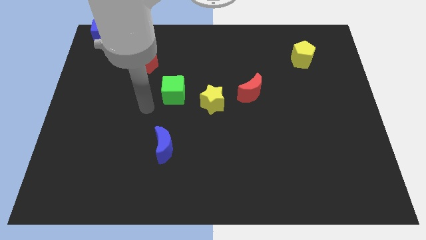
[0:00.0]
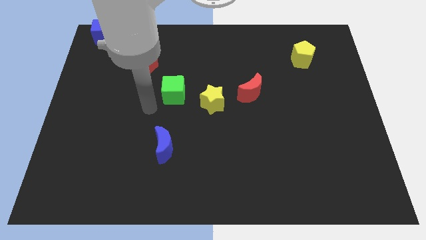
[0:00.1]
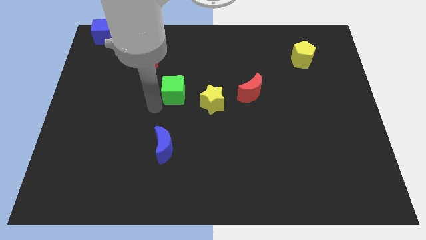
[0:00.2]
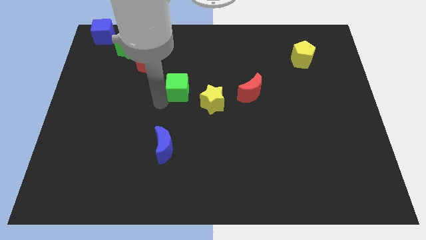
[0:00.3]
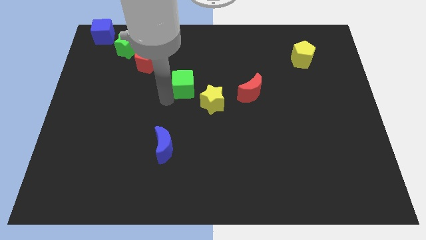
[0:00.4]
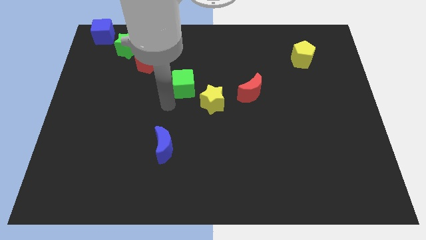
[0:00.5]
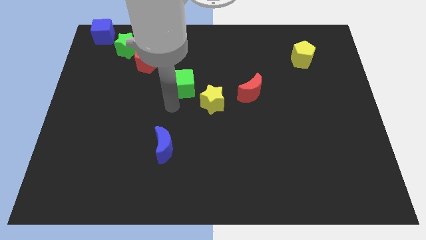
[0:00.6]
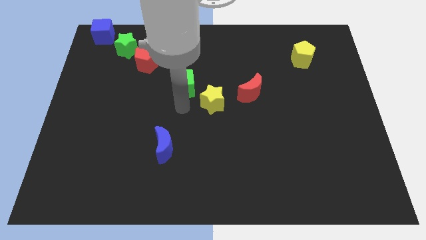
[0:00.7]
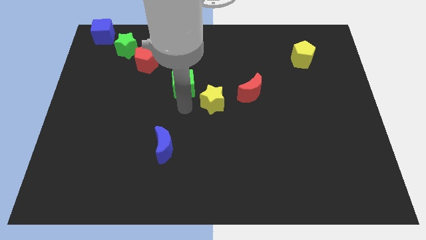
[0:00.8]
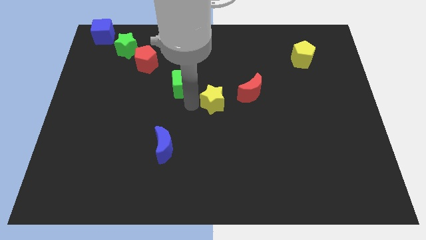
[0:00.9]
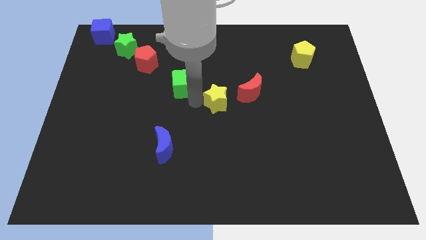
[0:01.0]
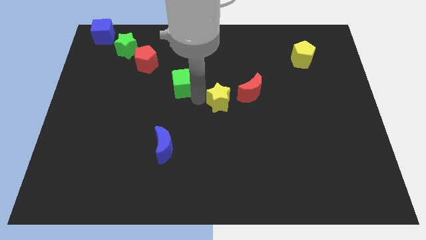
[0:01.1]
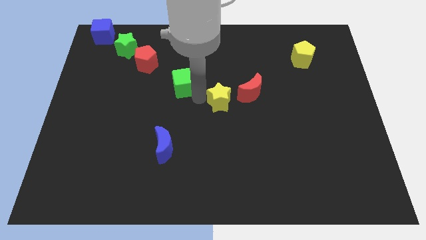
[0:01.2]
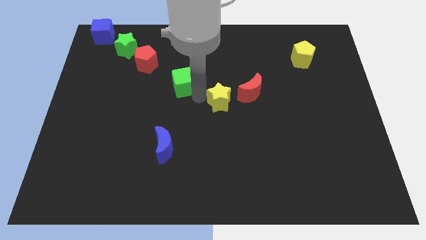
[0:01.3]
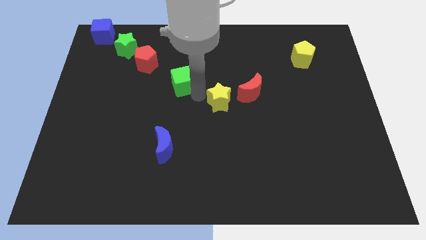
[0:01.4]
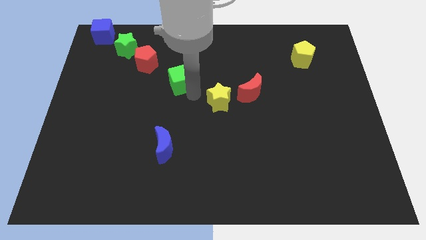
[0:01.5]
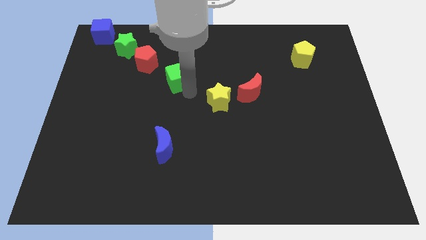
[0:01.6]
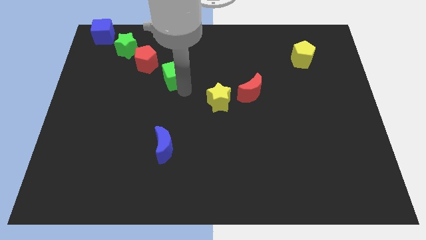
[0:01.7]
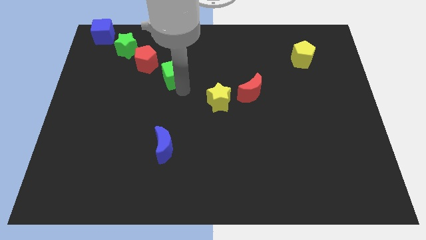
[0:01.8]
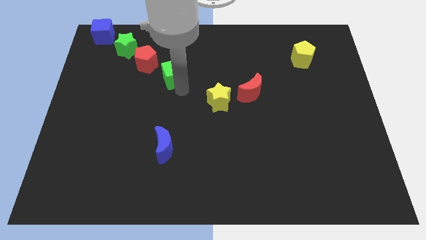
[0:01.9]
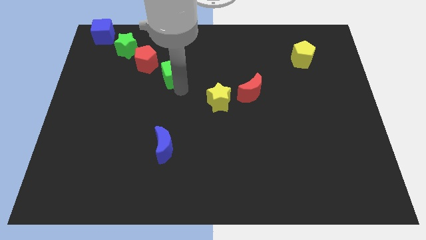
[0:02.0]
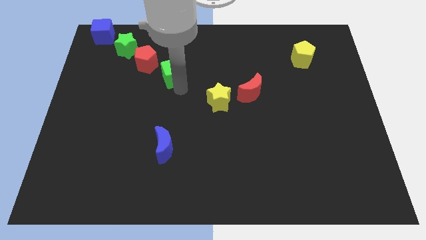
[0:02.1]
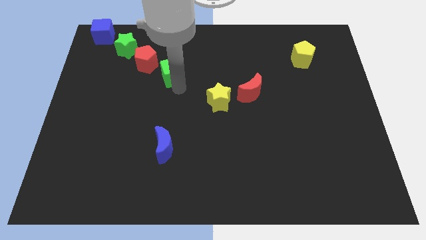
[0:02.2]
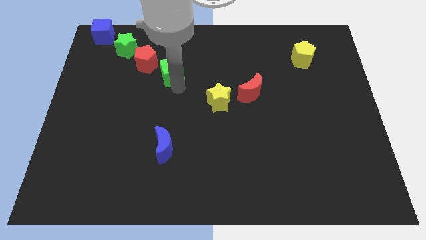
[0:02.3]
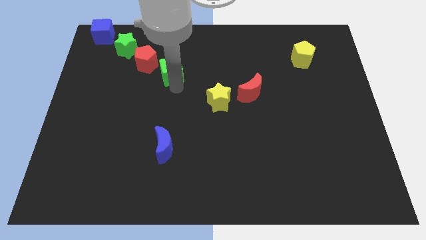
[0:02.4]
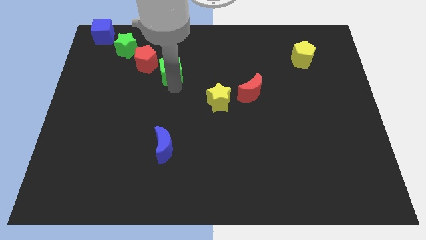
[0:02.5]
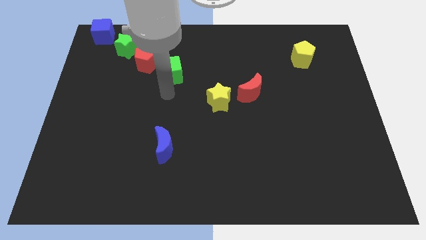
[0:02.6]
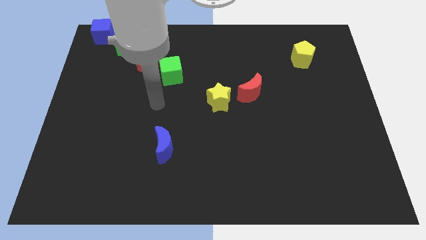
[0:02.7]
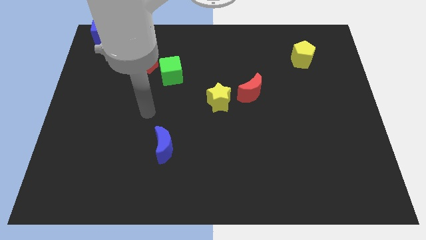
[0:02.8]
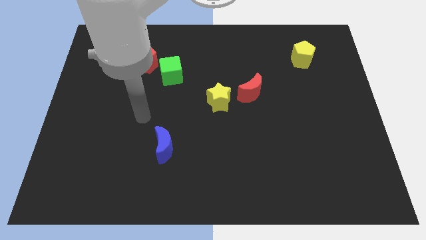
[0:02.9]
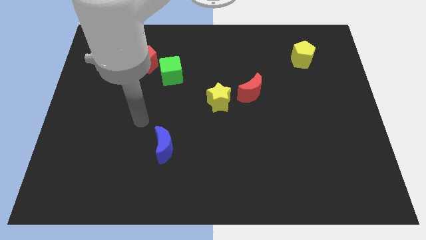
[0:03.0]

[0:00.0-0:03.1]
move the green cube diagonally below the red pentagon

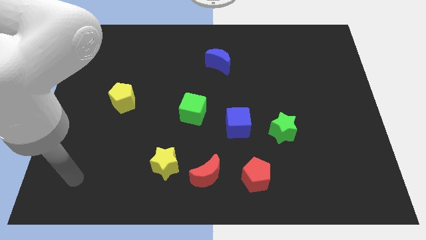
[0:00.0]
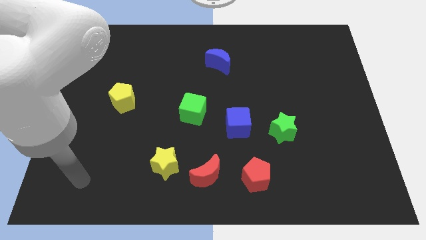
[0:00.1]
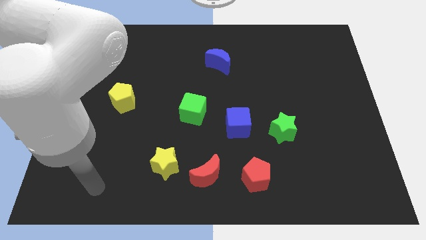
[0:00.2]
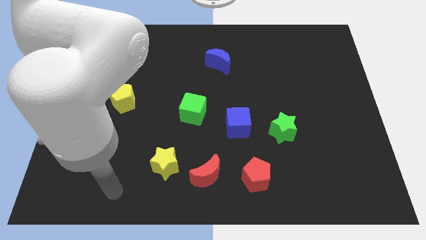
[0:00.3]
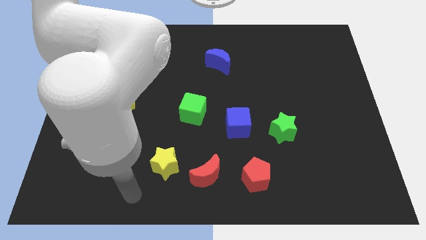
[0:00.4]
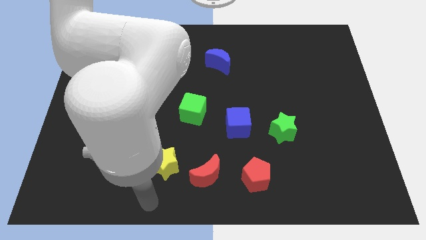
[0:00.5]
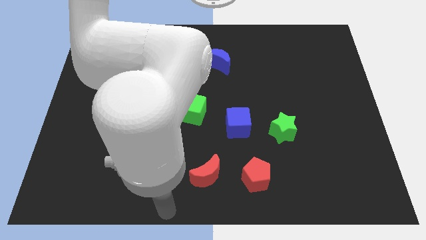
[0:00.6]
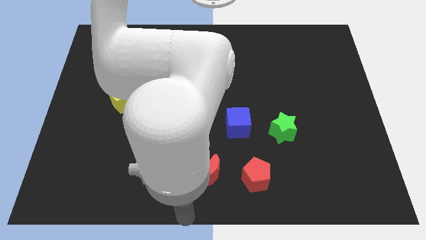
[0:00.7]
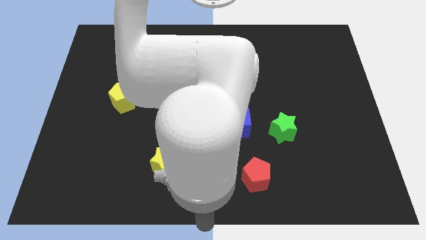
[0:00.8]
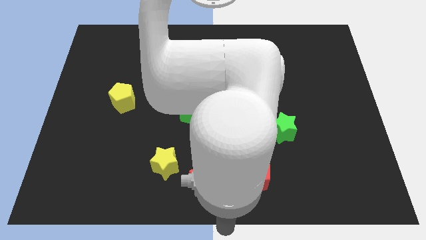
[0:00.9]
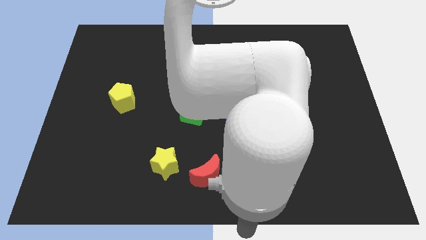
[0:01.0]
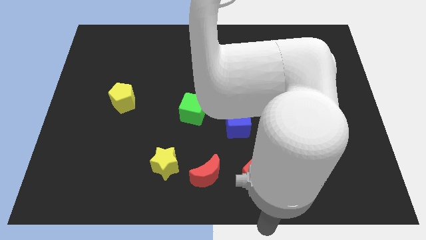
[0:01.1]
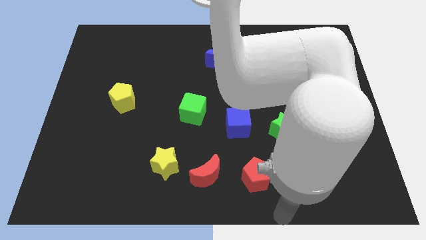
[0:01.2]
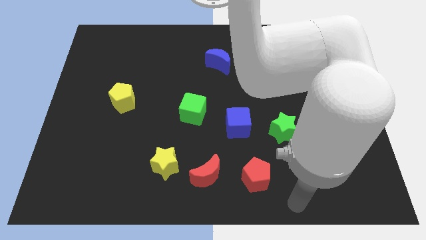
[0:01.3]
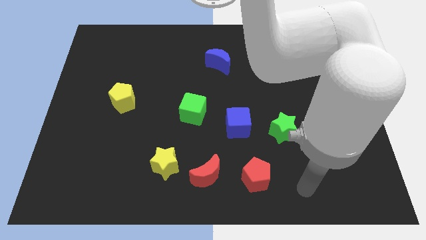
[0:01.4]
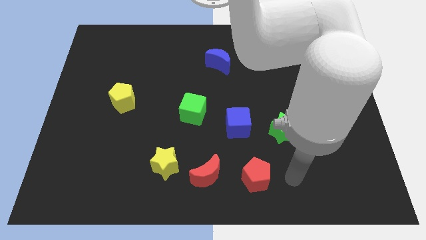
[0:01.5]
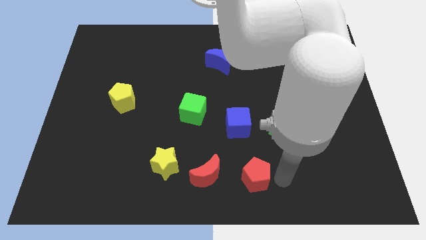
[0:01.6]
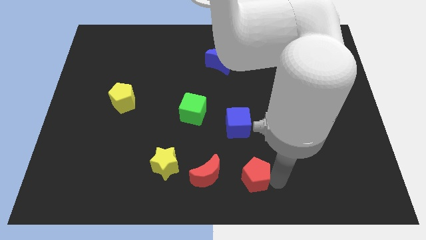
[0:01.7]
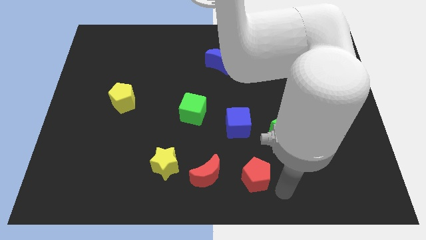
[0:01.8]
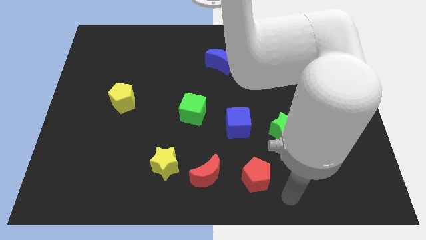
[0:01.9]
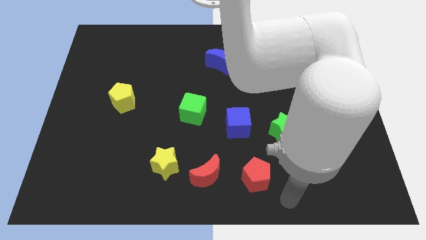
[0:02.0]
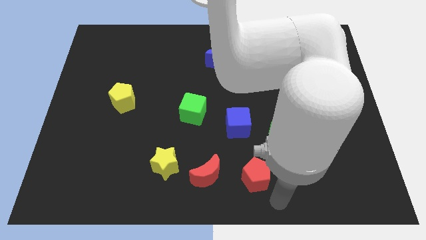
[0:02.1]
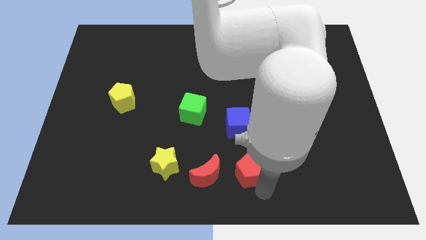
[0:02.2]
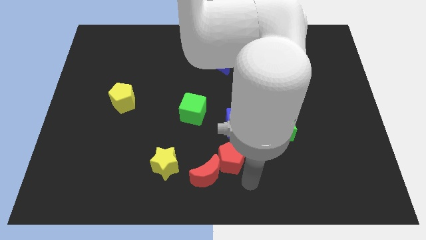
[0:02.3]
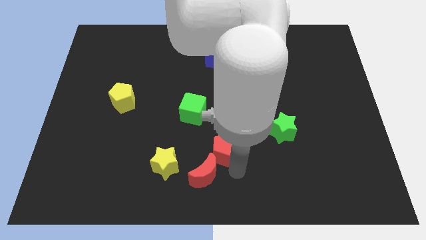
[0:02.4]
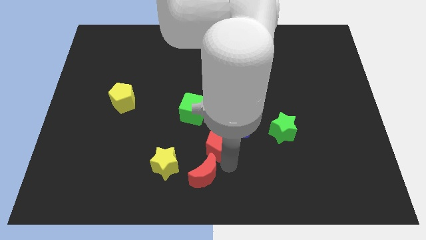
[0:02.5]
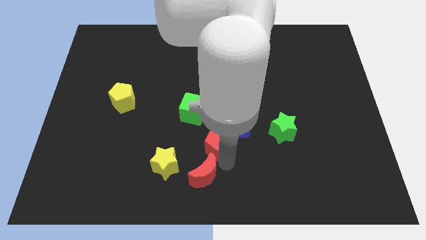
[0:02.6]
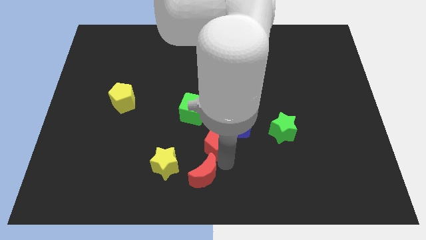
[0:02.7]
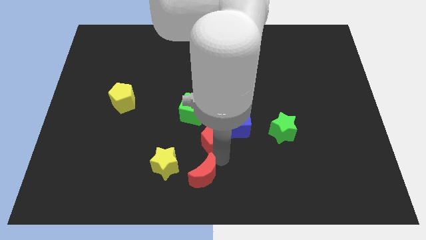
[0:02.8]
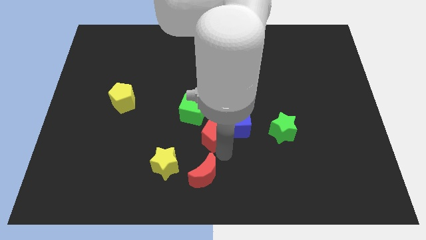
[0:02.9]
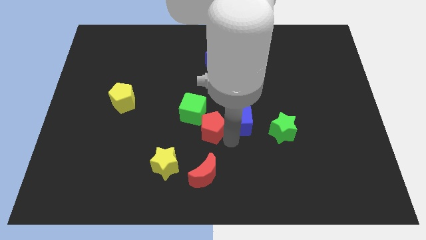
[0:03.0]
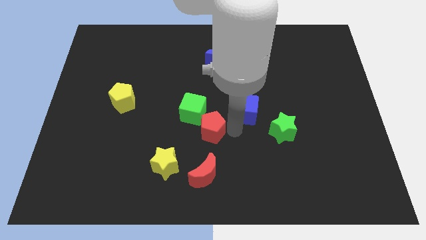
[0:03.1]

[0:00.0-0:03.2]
push red crescent to the top of red moon

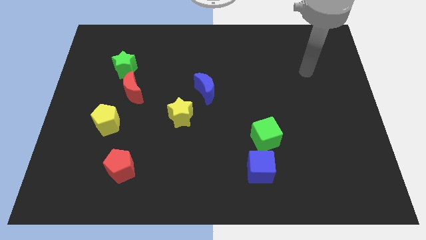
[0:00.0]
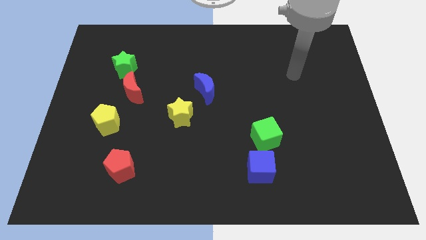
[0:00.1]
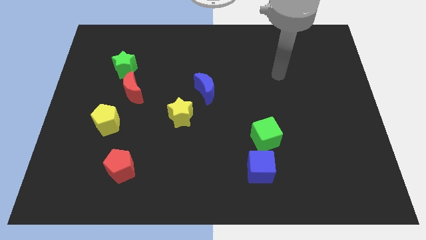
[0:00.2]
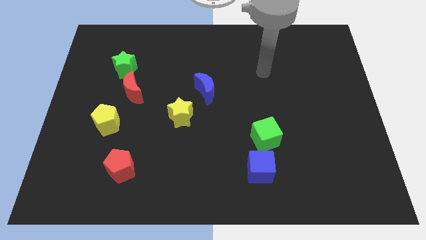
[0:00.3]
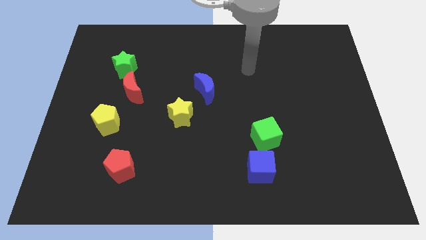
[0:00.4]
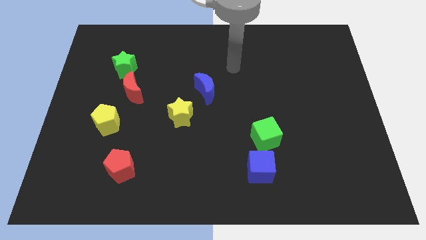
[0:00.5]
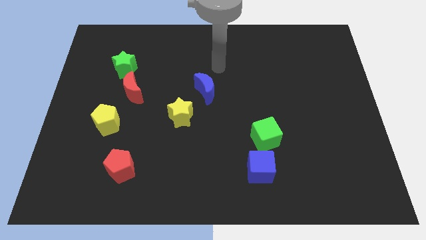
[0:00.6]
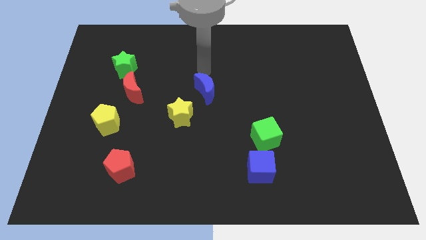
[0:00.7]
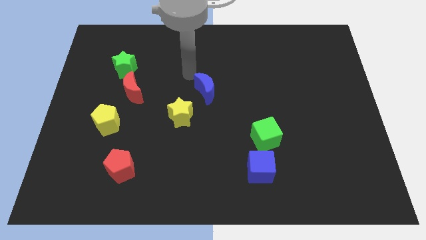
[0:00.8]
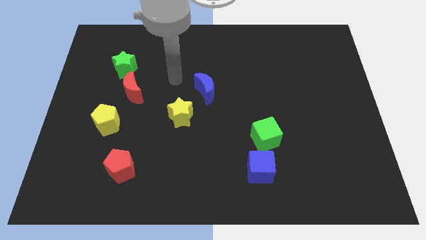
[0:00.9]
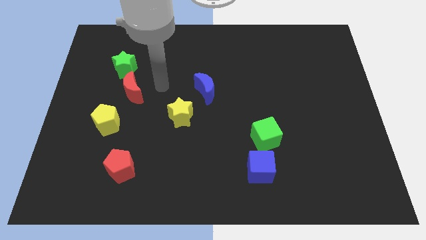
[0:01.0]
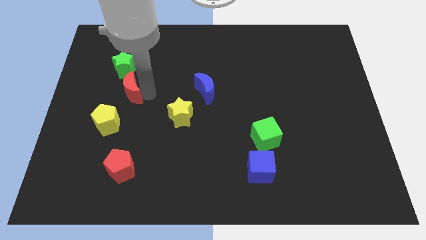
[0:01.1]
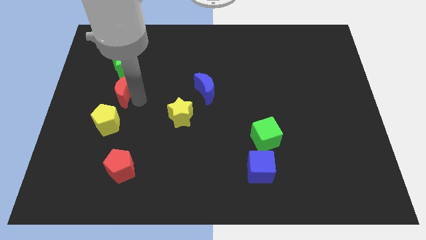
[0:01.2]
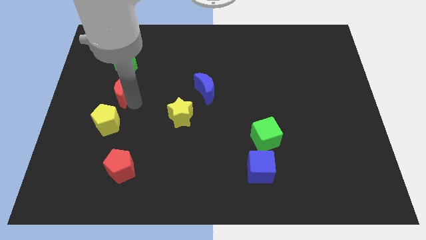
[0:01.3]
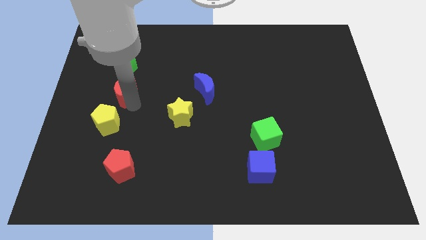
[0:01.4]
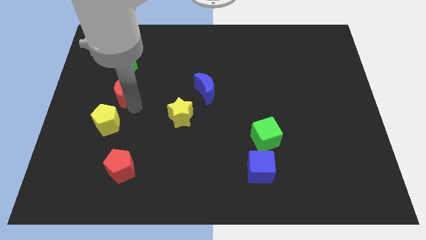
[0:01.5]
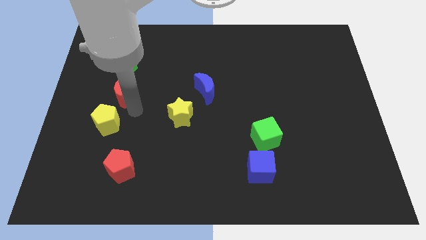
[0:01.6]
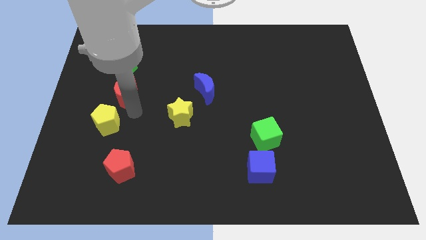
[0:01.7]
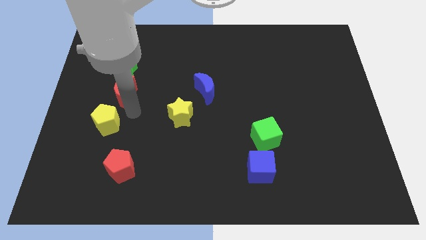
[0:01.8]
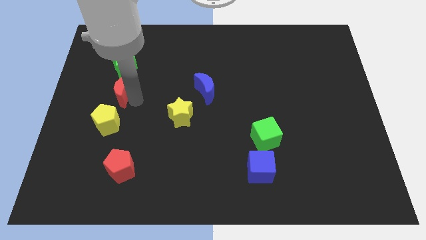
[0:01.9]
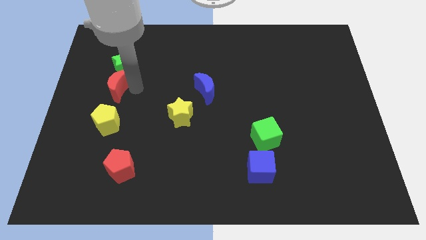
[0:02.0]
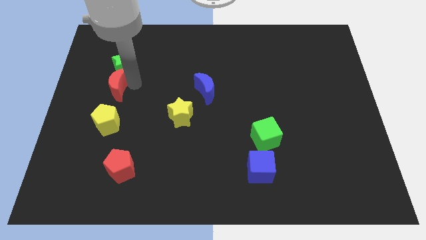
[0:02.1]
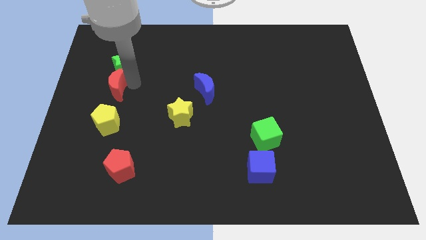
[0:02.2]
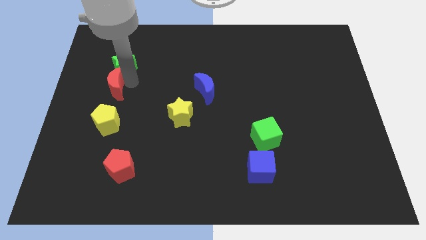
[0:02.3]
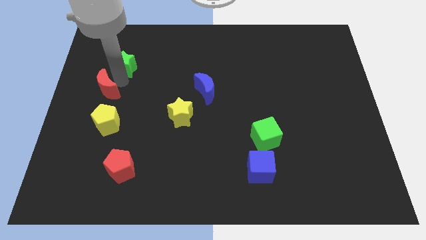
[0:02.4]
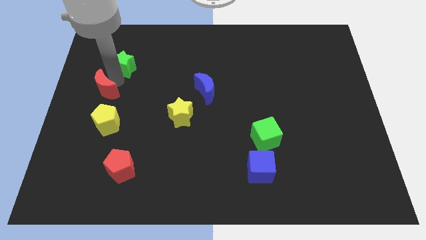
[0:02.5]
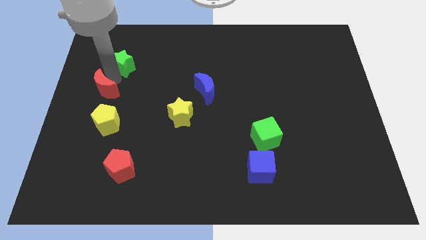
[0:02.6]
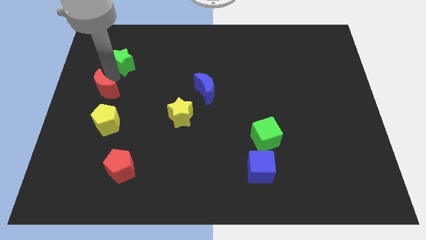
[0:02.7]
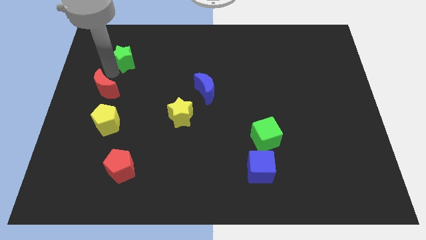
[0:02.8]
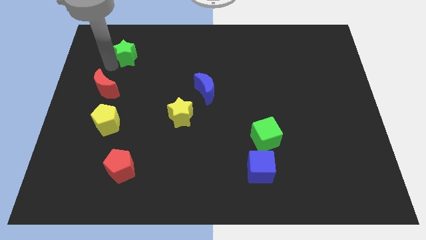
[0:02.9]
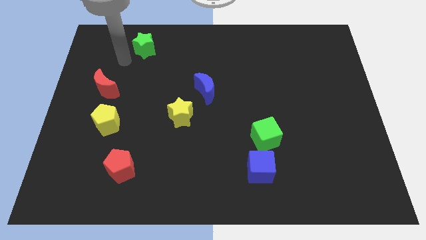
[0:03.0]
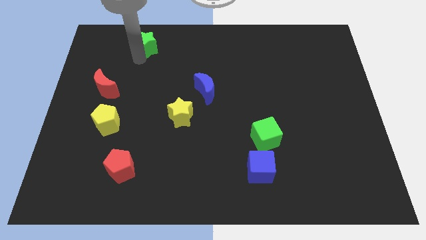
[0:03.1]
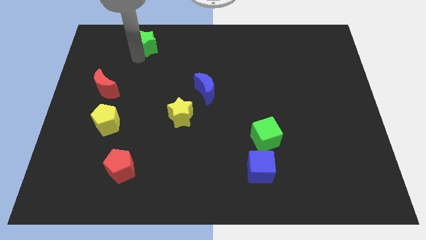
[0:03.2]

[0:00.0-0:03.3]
separate the green star from red crescent
